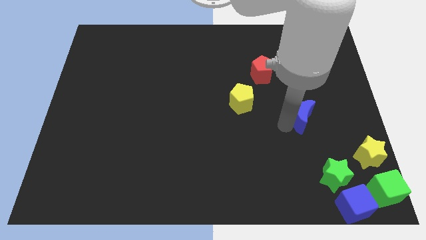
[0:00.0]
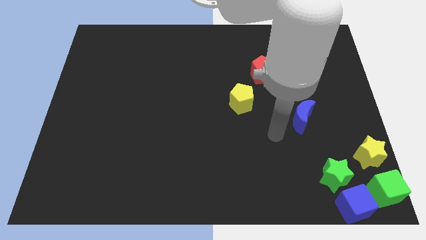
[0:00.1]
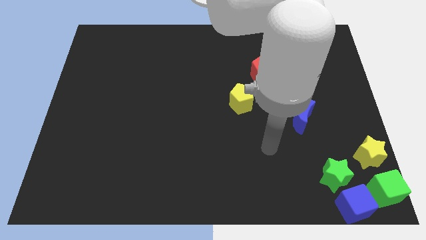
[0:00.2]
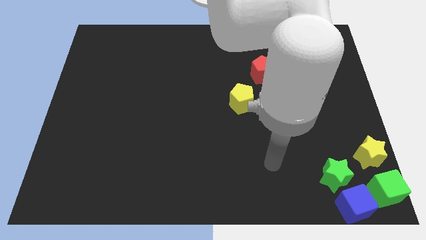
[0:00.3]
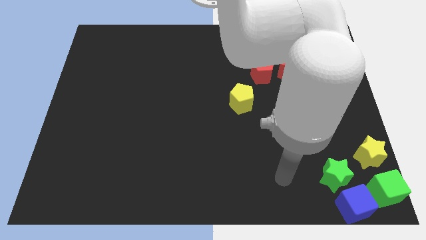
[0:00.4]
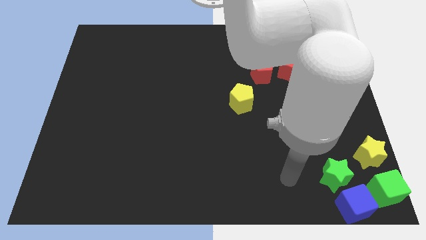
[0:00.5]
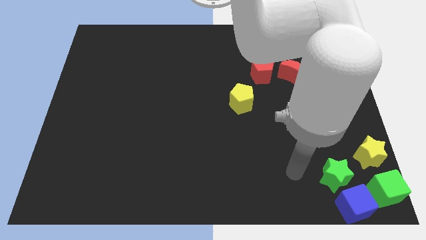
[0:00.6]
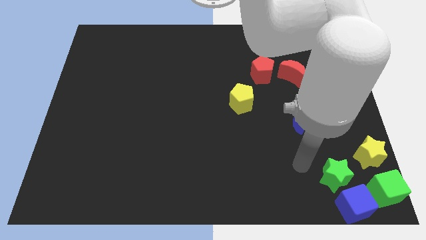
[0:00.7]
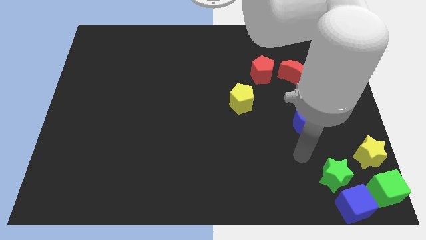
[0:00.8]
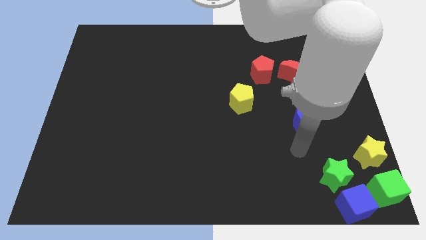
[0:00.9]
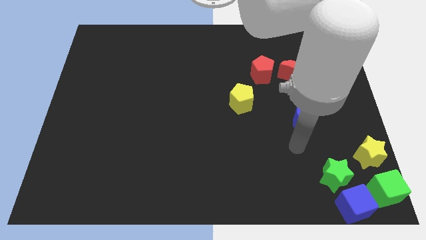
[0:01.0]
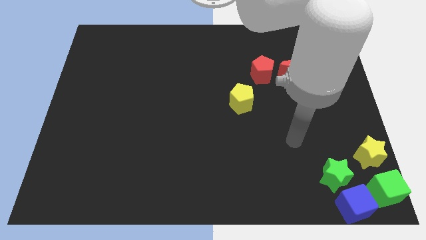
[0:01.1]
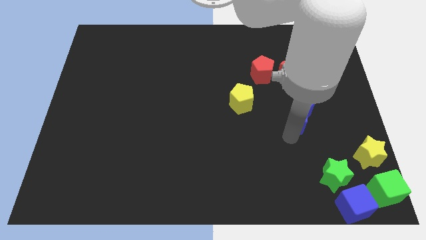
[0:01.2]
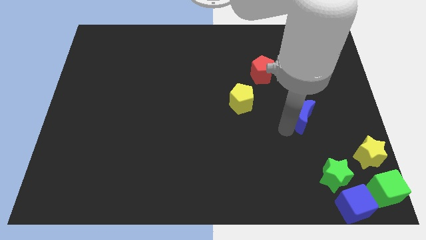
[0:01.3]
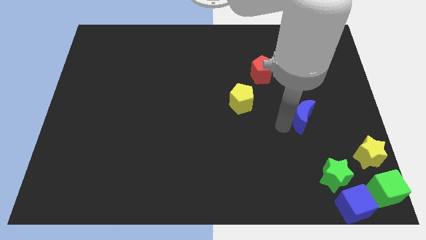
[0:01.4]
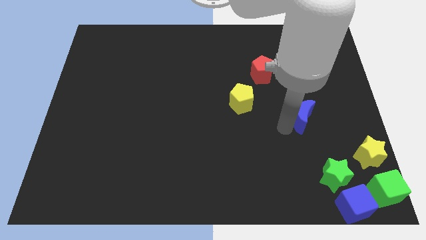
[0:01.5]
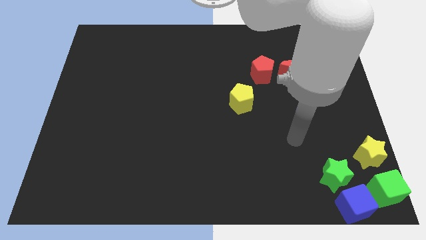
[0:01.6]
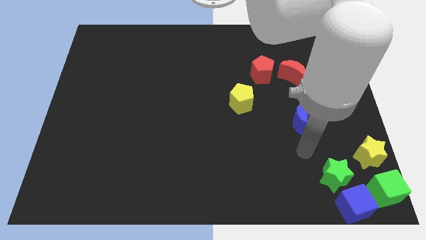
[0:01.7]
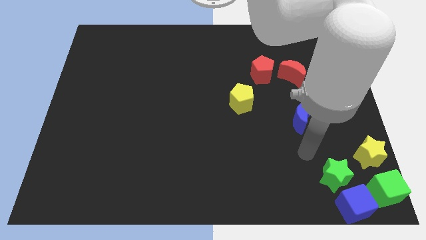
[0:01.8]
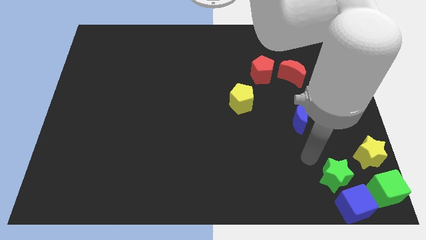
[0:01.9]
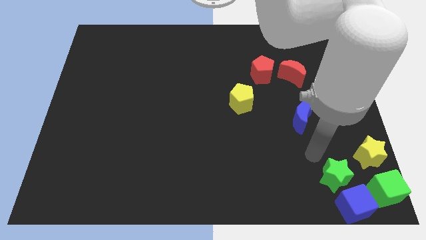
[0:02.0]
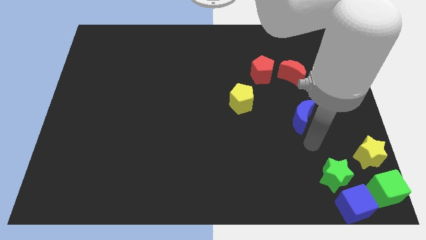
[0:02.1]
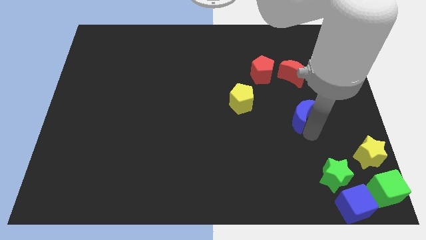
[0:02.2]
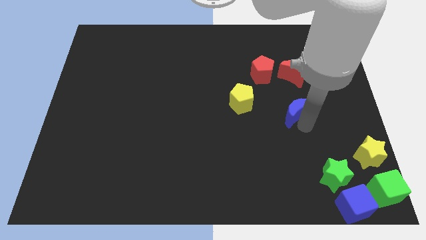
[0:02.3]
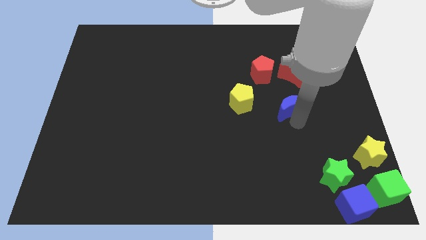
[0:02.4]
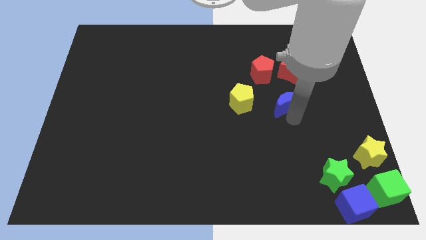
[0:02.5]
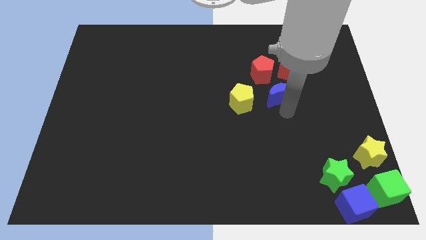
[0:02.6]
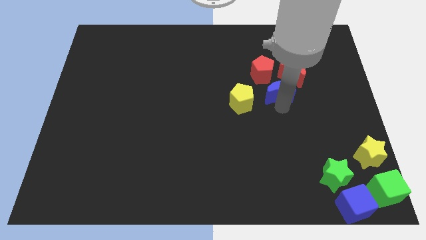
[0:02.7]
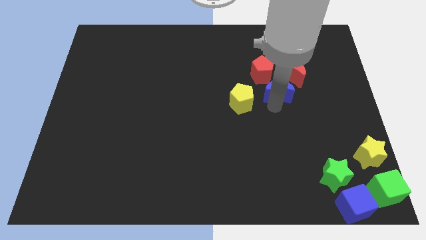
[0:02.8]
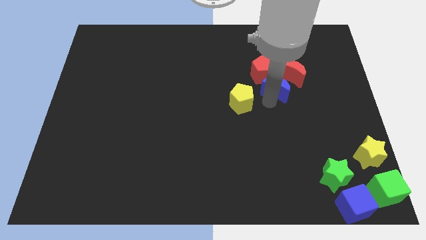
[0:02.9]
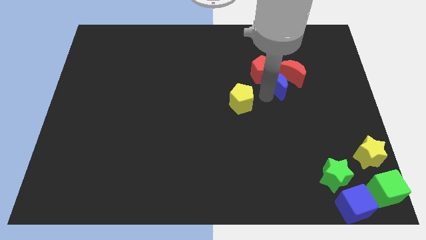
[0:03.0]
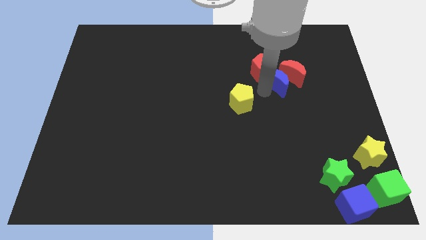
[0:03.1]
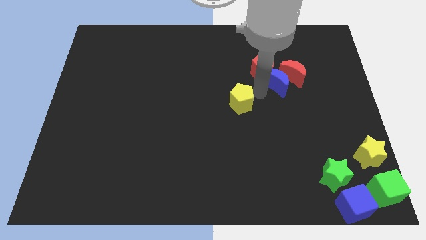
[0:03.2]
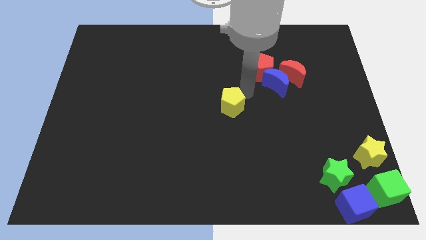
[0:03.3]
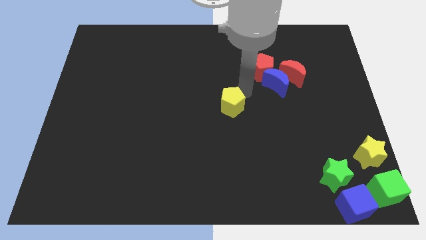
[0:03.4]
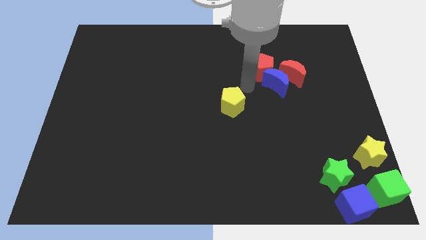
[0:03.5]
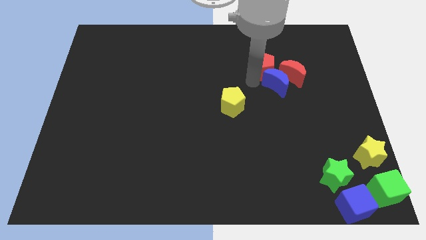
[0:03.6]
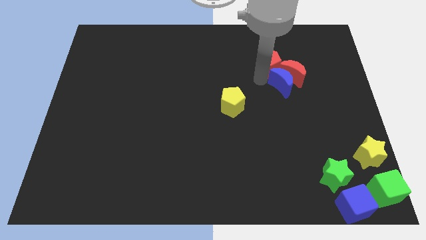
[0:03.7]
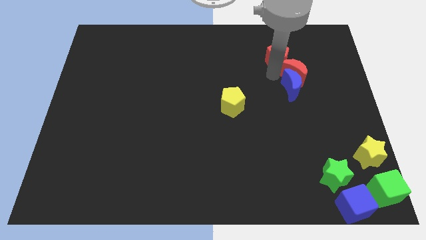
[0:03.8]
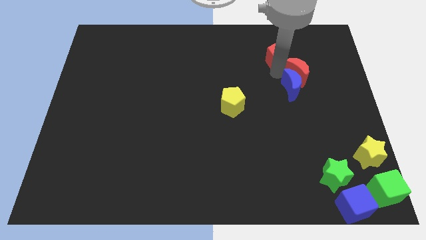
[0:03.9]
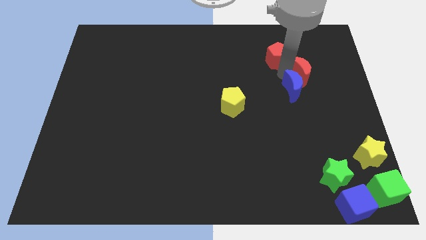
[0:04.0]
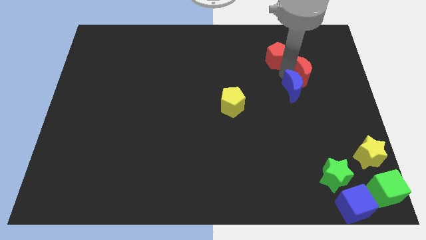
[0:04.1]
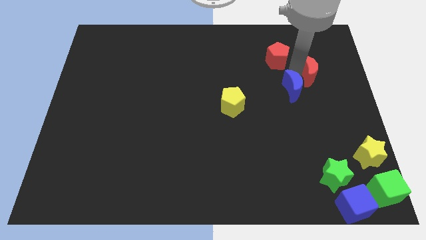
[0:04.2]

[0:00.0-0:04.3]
push the blue moon to the left of the red moon

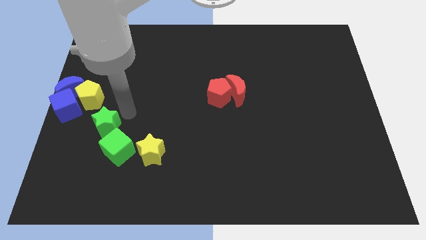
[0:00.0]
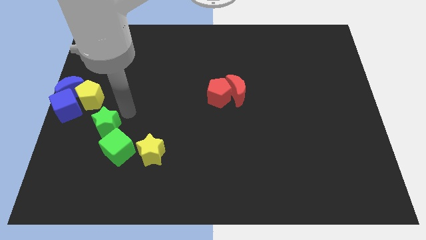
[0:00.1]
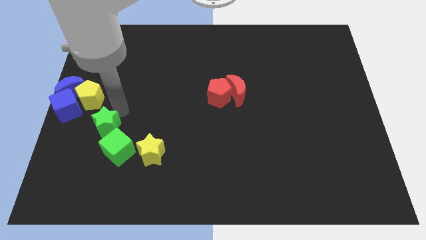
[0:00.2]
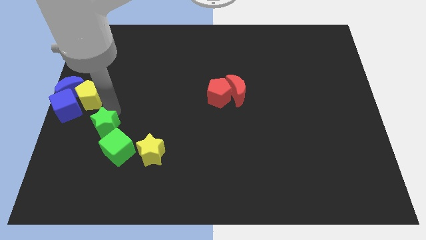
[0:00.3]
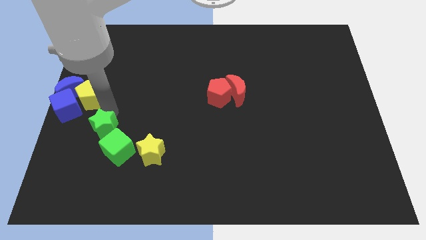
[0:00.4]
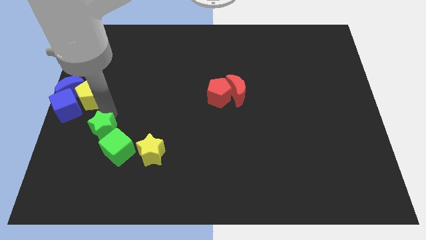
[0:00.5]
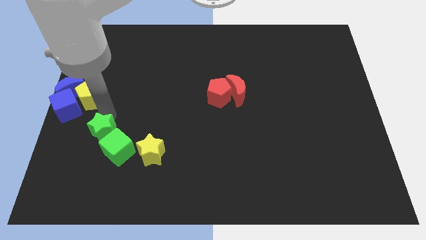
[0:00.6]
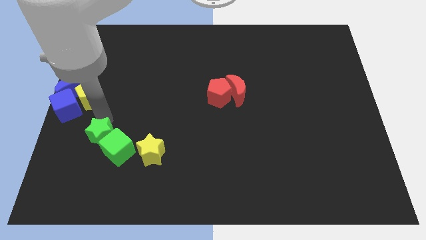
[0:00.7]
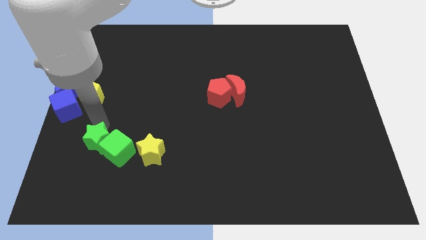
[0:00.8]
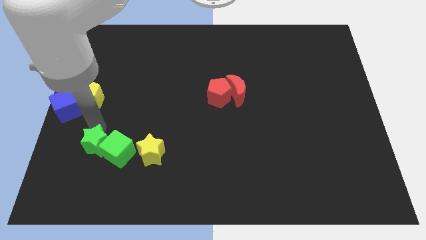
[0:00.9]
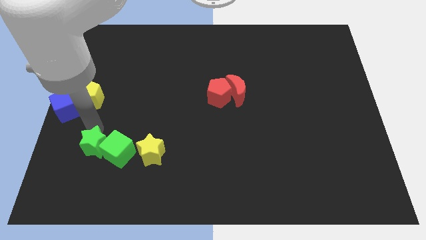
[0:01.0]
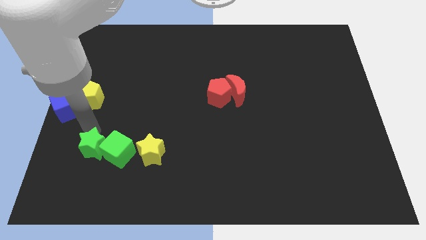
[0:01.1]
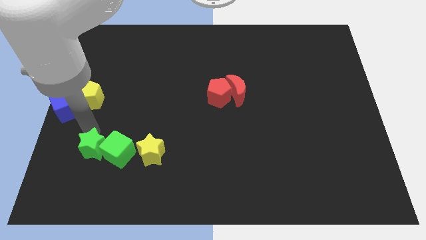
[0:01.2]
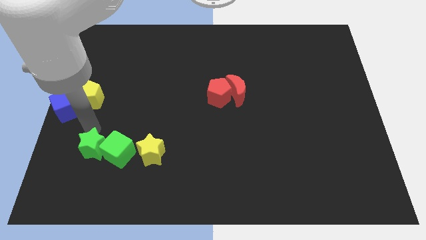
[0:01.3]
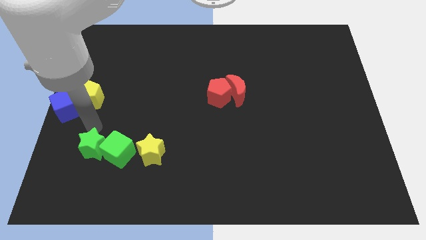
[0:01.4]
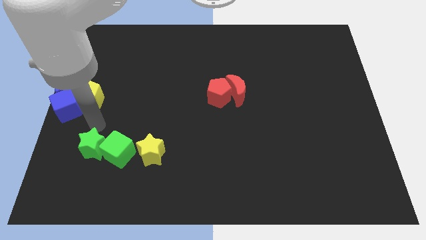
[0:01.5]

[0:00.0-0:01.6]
move the green star to the left of the green cube

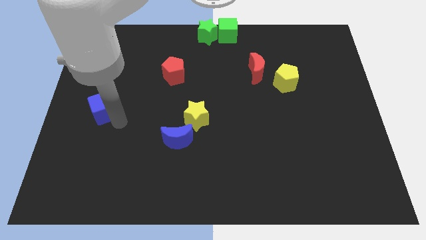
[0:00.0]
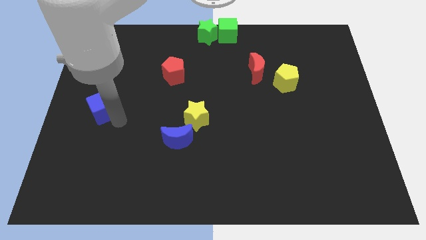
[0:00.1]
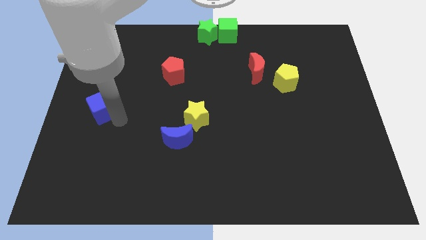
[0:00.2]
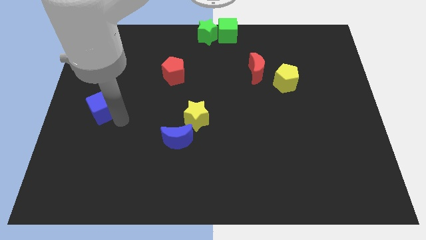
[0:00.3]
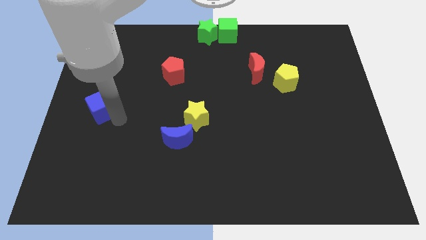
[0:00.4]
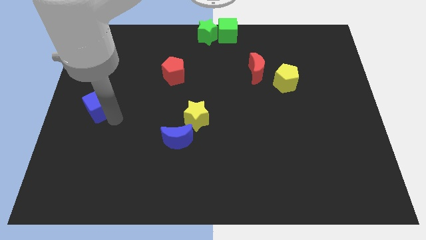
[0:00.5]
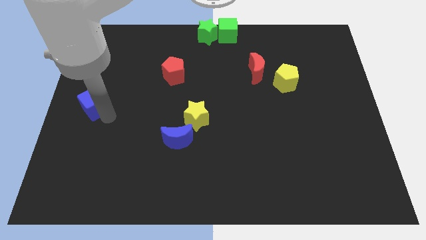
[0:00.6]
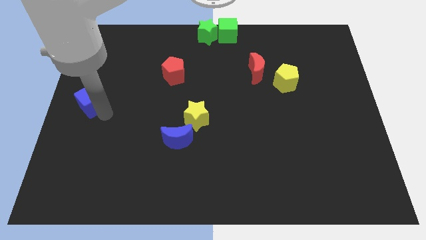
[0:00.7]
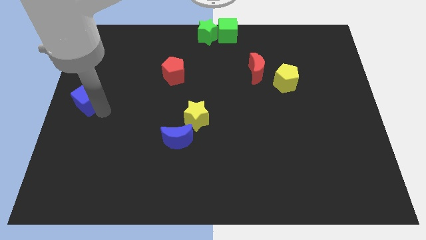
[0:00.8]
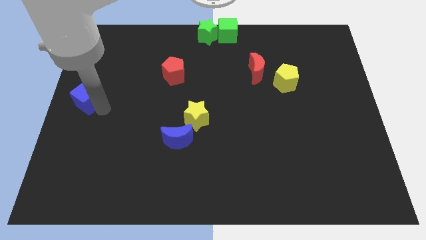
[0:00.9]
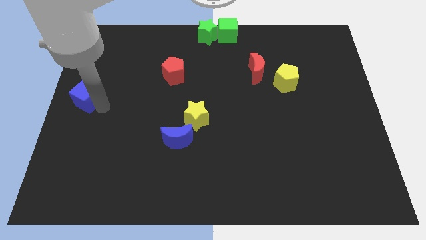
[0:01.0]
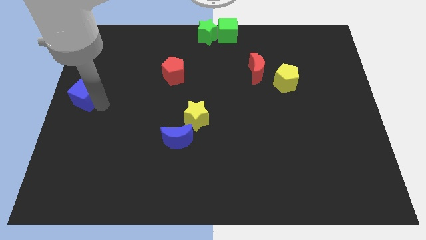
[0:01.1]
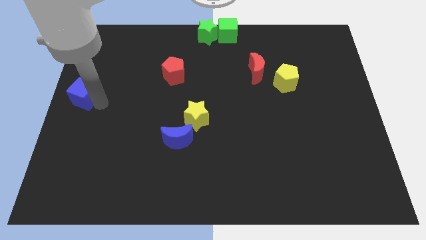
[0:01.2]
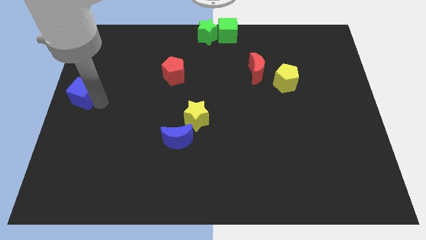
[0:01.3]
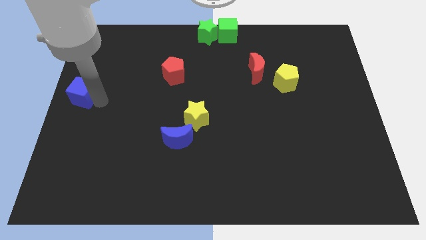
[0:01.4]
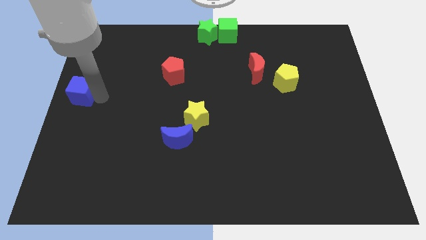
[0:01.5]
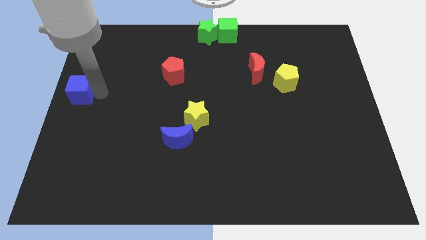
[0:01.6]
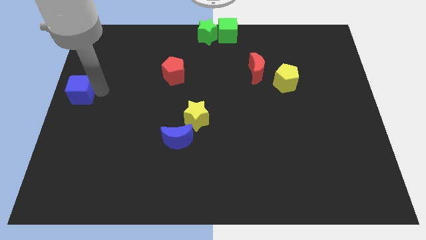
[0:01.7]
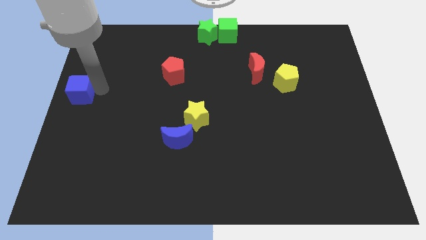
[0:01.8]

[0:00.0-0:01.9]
drag blue cube to the left center of the board

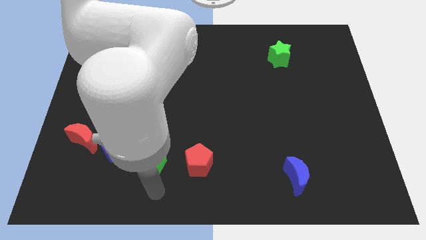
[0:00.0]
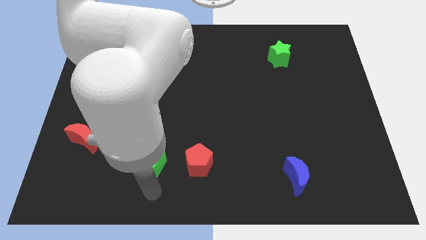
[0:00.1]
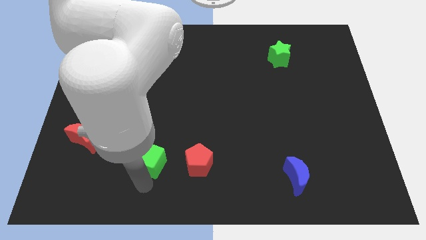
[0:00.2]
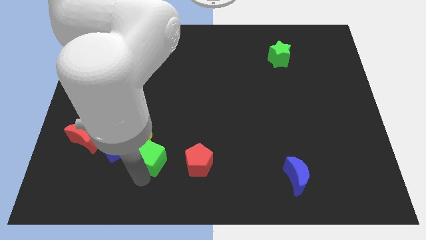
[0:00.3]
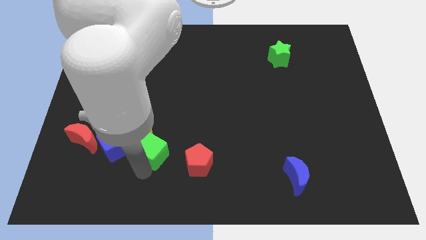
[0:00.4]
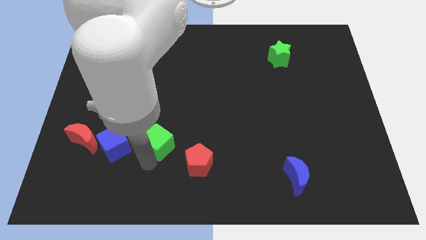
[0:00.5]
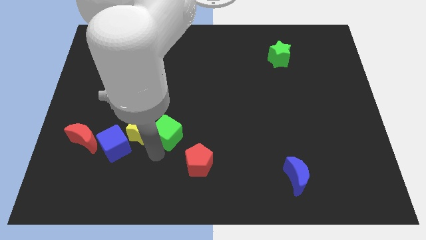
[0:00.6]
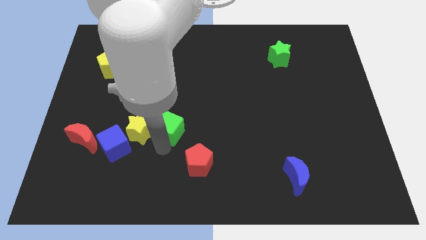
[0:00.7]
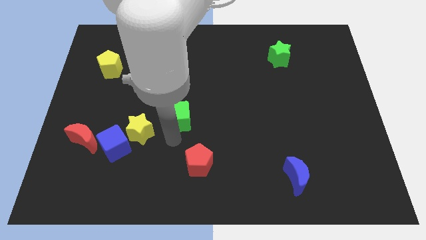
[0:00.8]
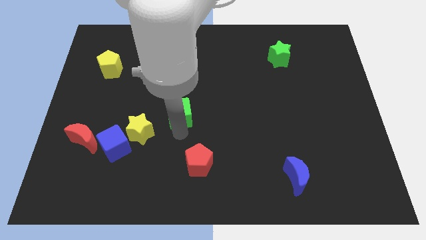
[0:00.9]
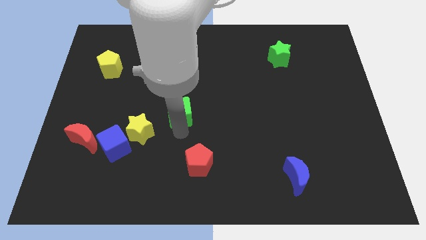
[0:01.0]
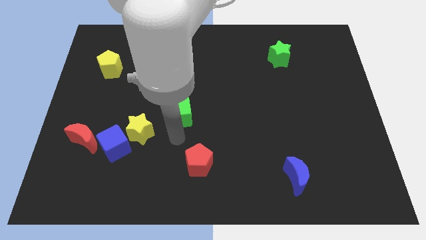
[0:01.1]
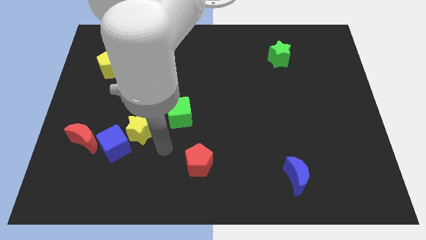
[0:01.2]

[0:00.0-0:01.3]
place green cube diagonally top left to the red pentagon
